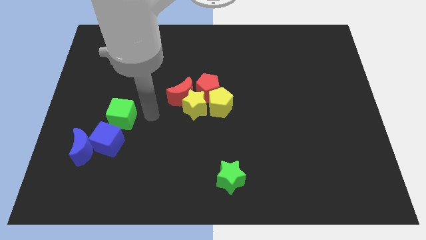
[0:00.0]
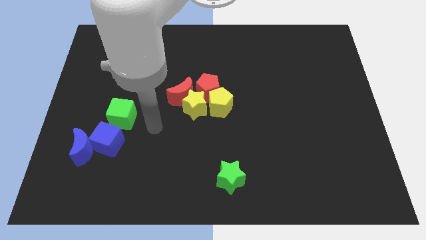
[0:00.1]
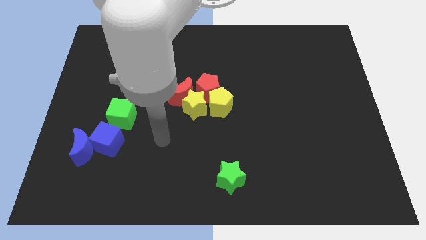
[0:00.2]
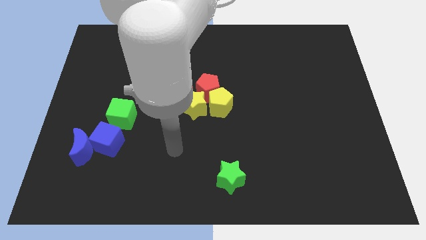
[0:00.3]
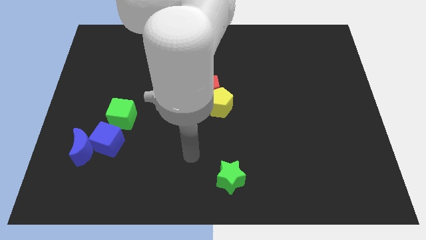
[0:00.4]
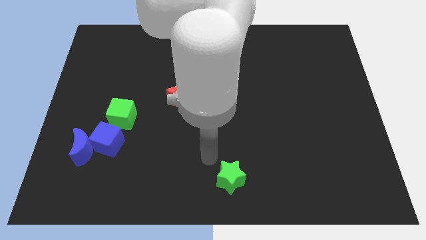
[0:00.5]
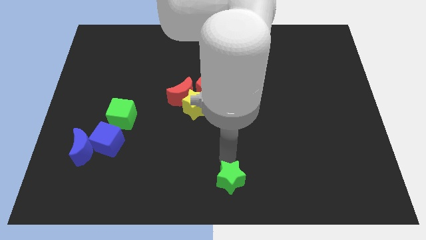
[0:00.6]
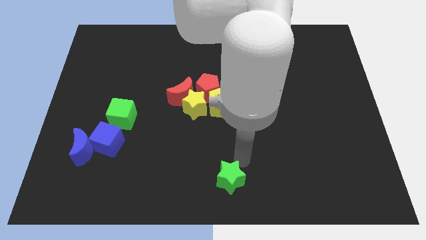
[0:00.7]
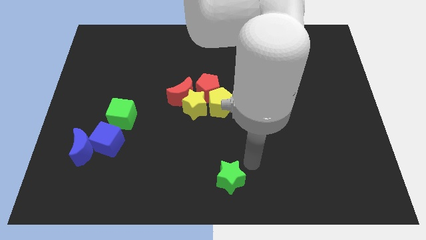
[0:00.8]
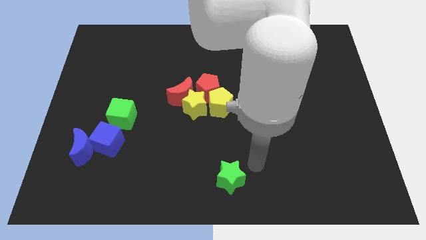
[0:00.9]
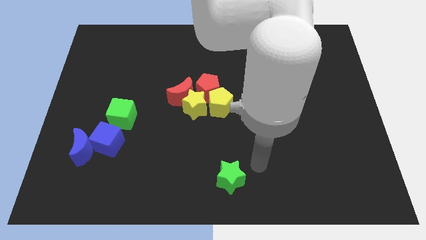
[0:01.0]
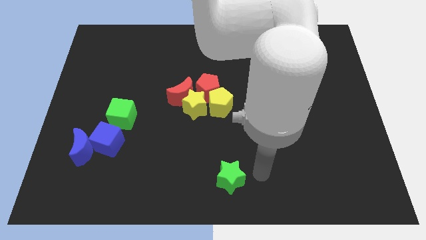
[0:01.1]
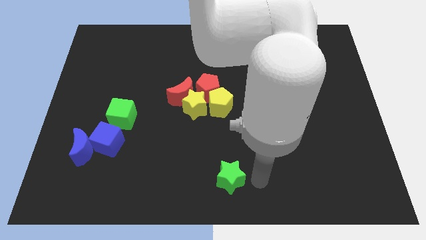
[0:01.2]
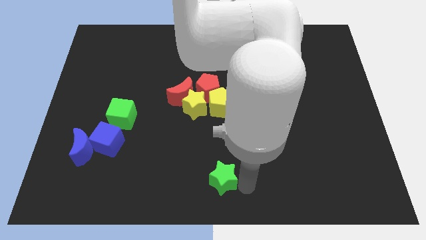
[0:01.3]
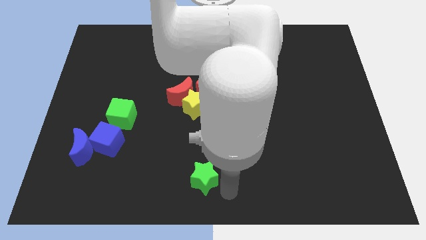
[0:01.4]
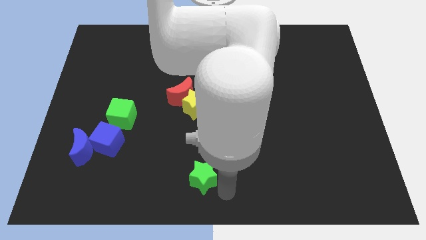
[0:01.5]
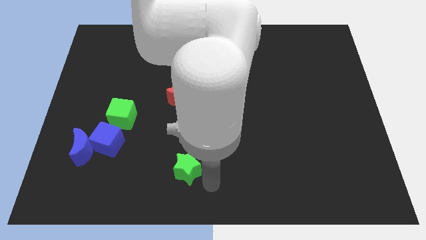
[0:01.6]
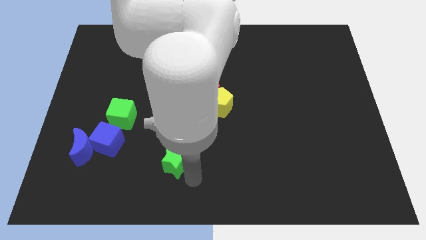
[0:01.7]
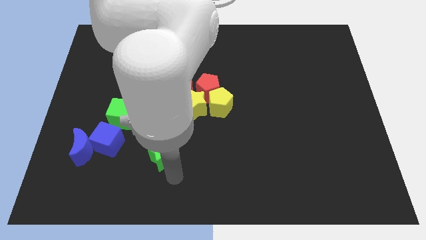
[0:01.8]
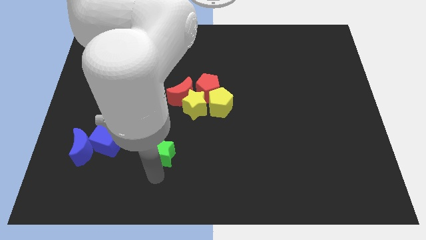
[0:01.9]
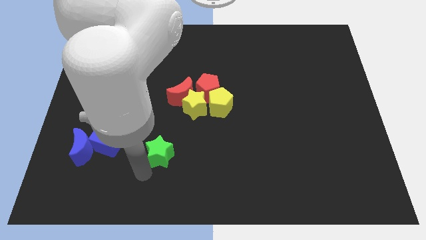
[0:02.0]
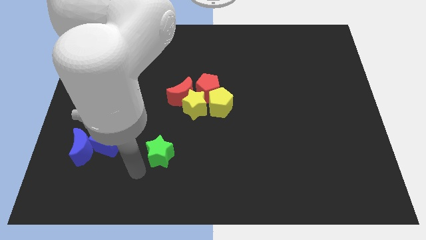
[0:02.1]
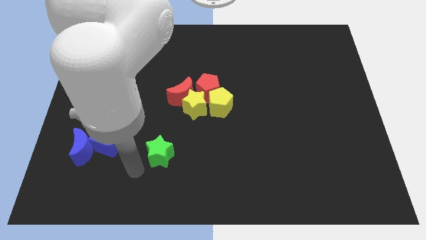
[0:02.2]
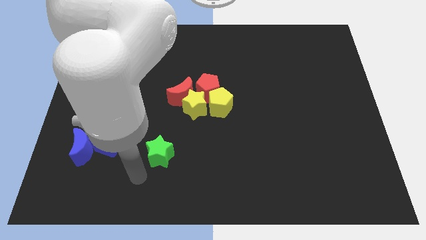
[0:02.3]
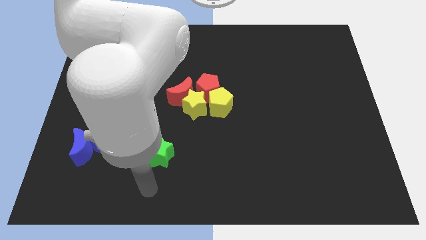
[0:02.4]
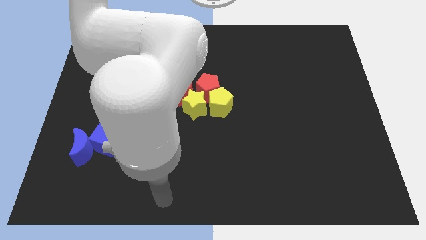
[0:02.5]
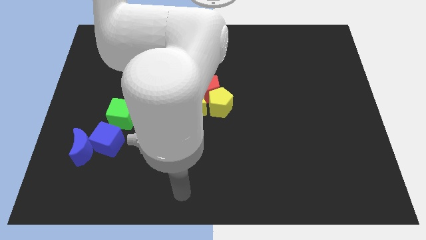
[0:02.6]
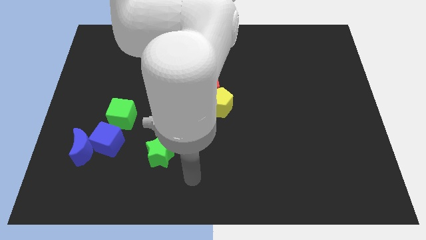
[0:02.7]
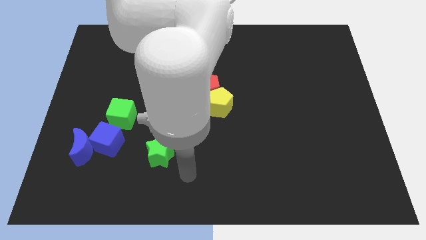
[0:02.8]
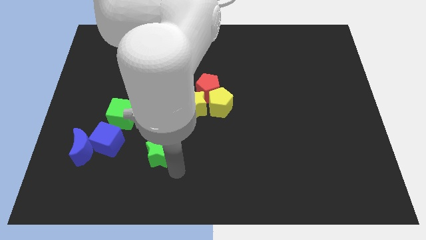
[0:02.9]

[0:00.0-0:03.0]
move the green star towards the green cube

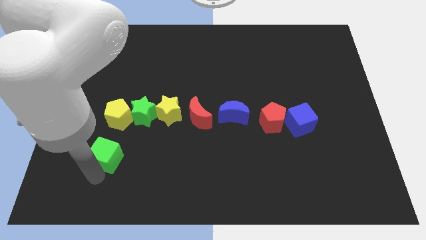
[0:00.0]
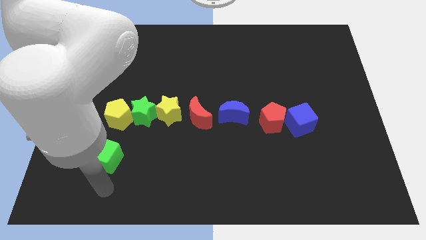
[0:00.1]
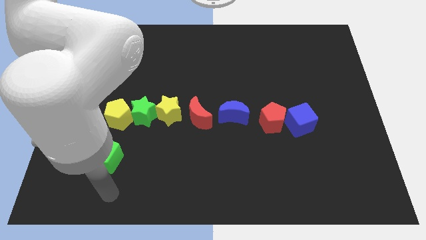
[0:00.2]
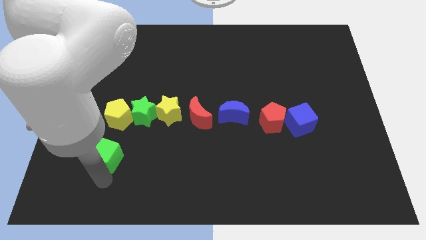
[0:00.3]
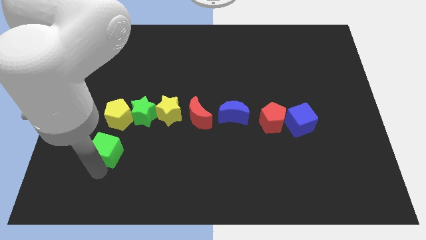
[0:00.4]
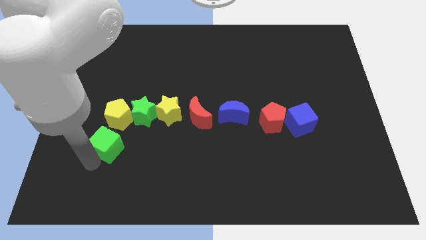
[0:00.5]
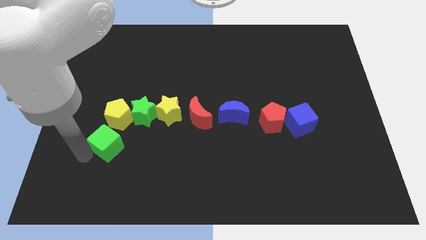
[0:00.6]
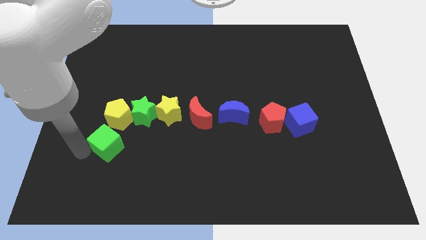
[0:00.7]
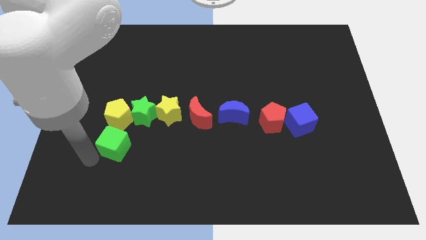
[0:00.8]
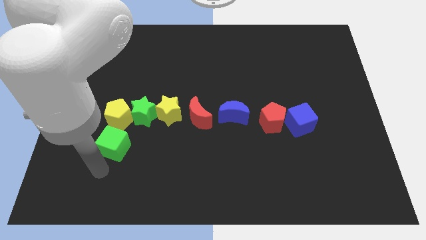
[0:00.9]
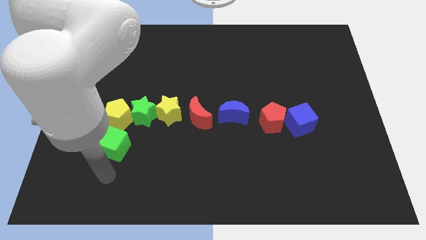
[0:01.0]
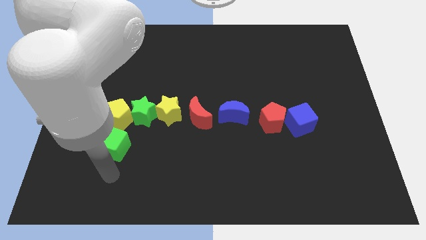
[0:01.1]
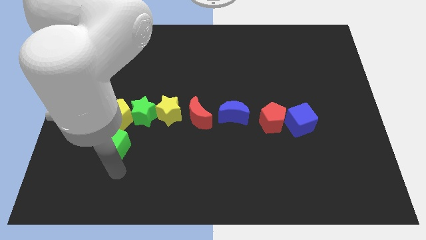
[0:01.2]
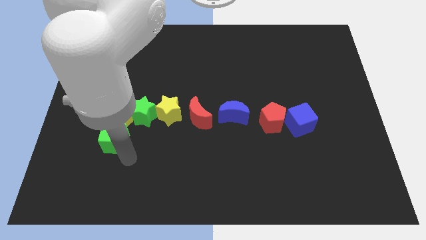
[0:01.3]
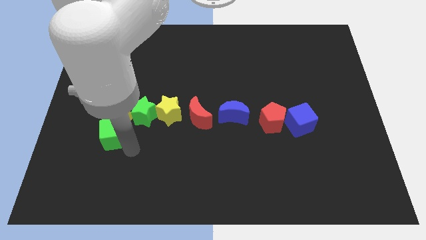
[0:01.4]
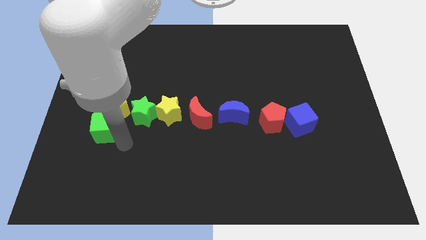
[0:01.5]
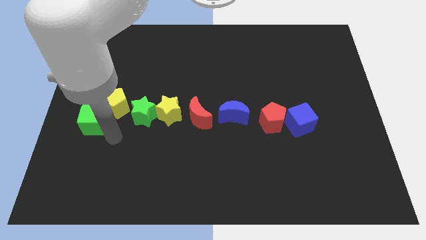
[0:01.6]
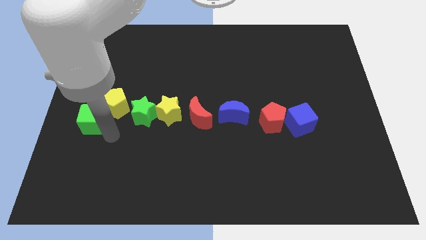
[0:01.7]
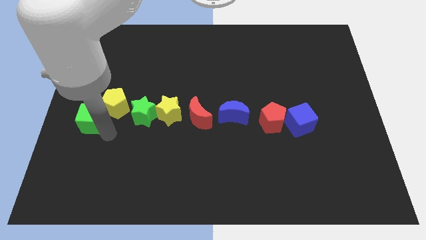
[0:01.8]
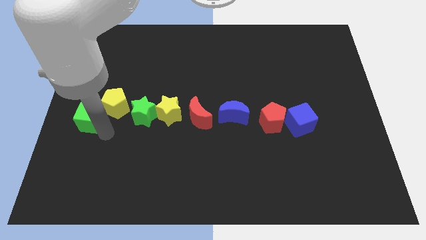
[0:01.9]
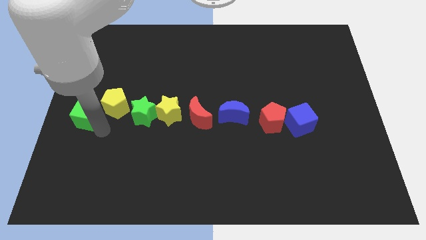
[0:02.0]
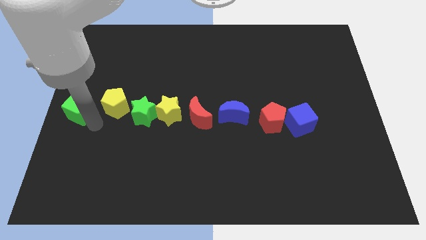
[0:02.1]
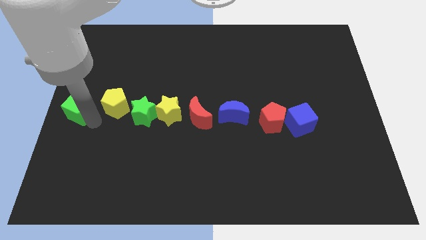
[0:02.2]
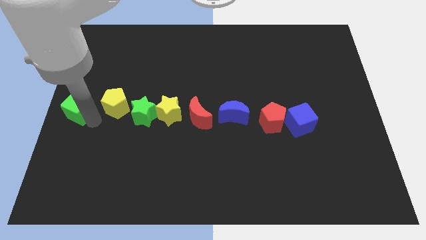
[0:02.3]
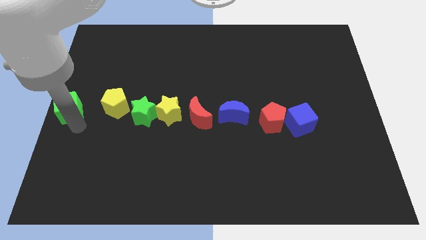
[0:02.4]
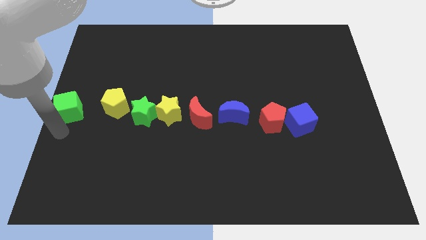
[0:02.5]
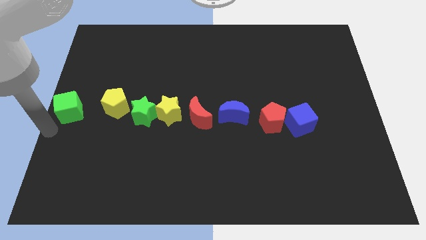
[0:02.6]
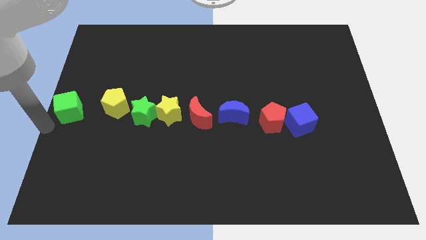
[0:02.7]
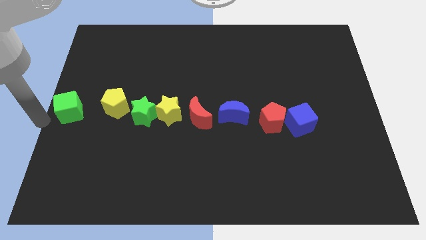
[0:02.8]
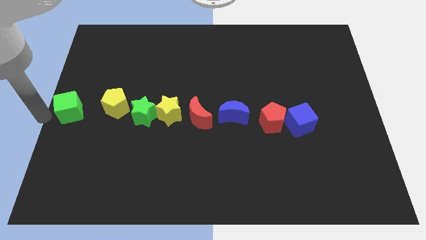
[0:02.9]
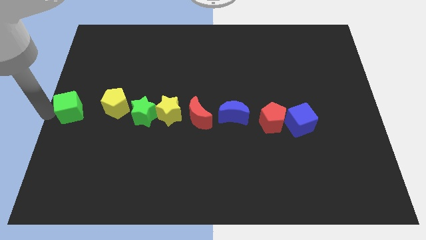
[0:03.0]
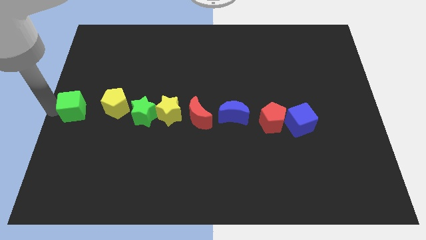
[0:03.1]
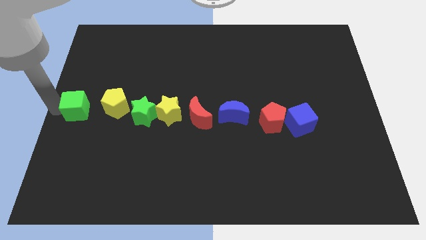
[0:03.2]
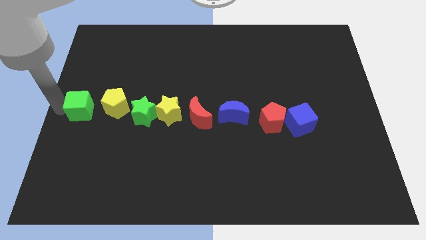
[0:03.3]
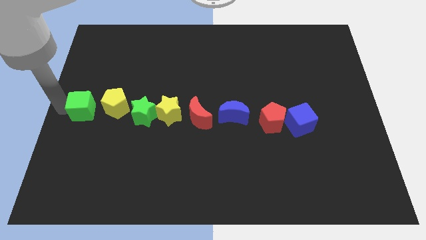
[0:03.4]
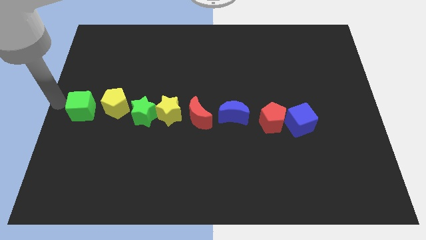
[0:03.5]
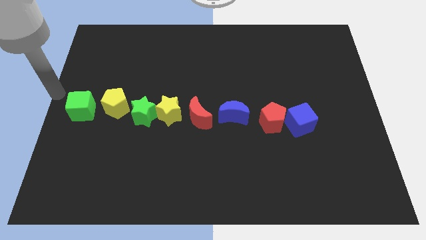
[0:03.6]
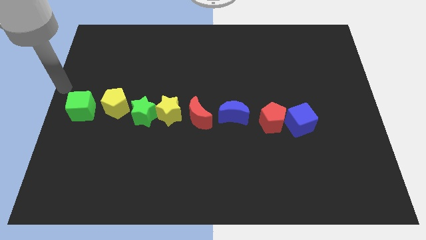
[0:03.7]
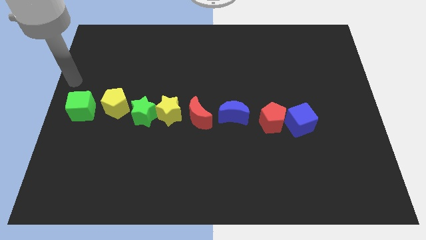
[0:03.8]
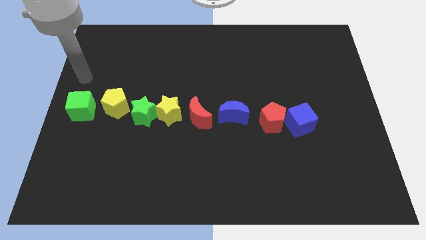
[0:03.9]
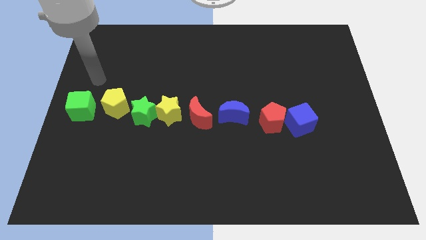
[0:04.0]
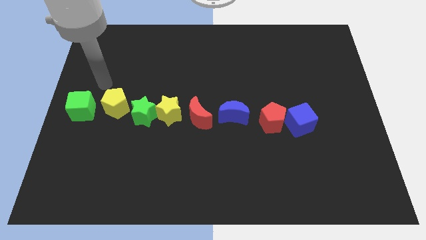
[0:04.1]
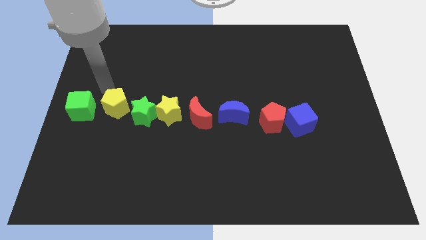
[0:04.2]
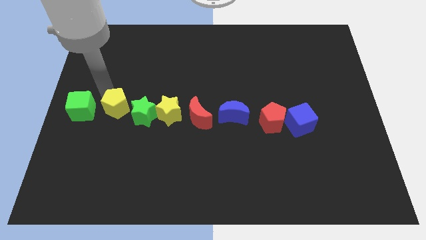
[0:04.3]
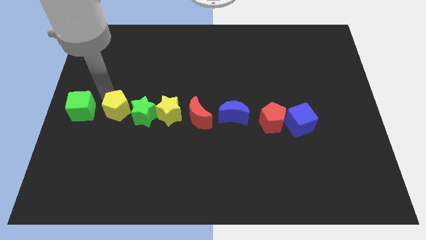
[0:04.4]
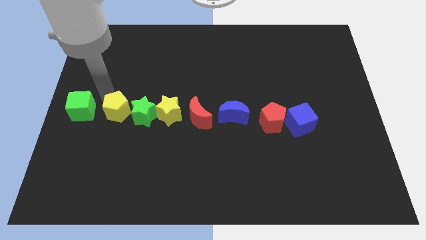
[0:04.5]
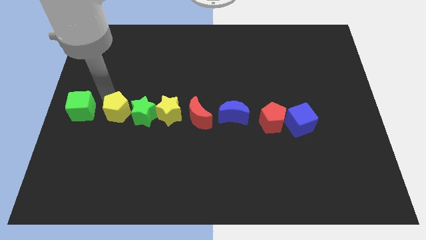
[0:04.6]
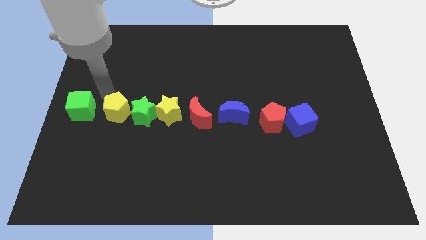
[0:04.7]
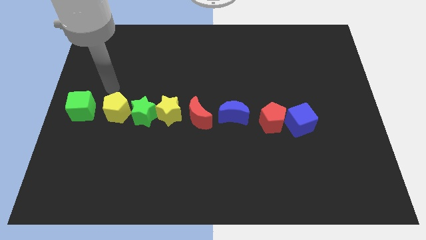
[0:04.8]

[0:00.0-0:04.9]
line the blocks up horizontally

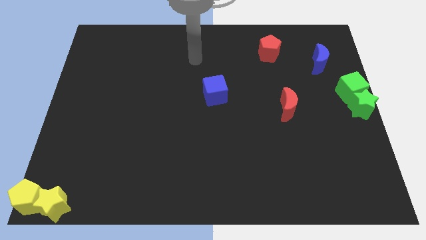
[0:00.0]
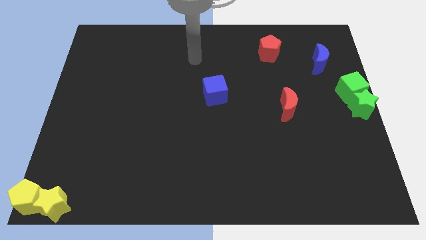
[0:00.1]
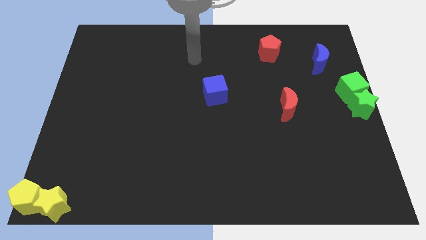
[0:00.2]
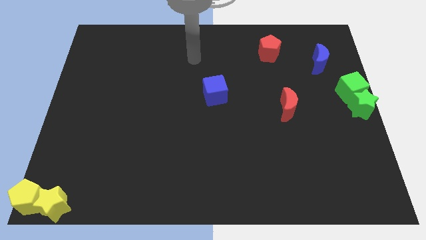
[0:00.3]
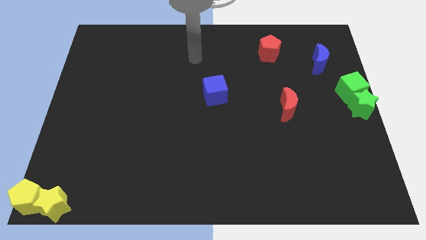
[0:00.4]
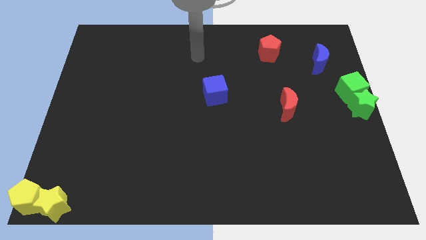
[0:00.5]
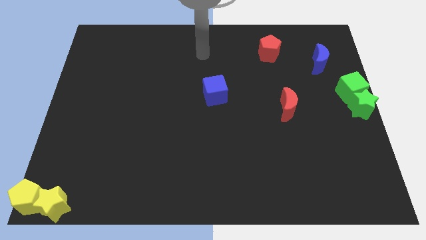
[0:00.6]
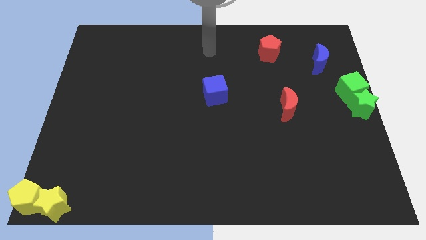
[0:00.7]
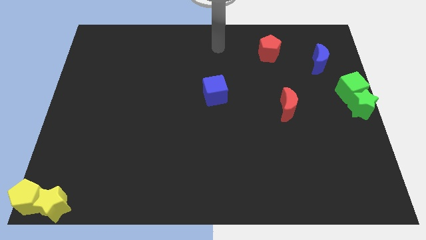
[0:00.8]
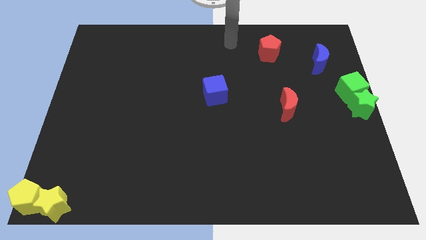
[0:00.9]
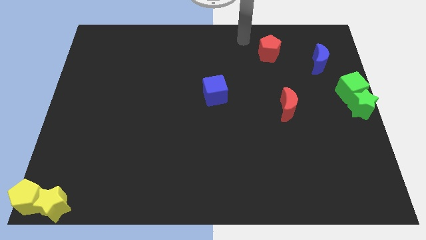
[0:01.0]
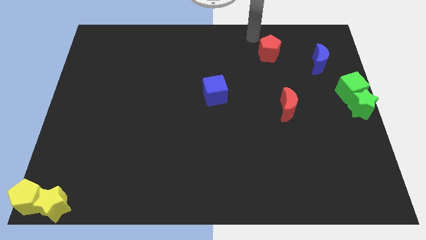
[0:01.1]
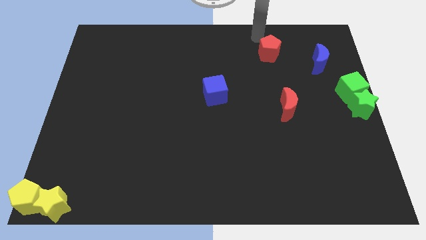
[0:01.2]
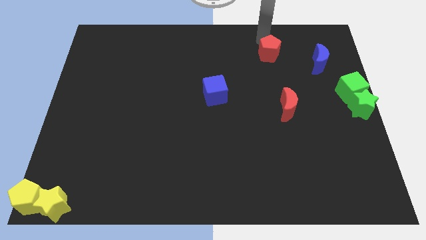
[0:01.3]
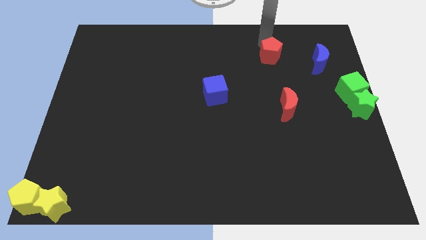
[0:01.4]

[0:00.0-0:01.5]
point your arm away from red pentagon
